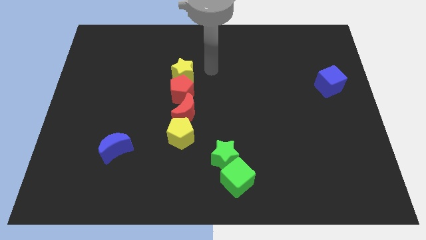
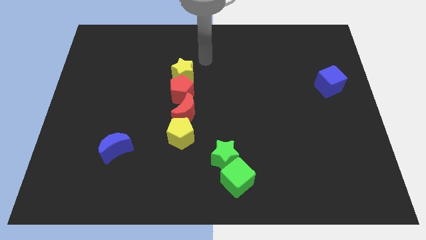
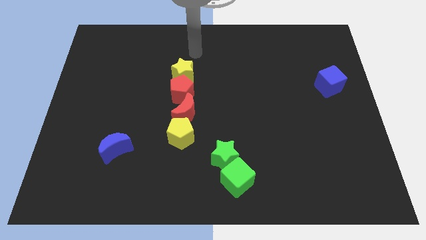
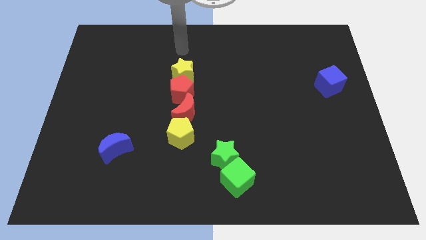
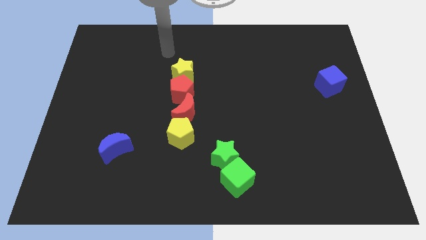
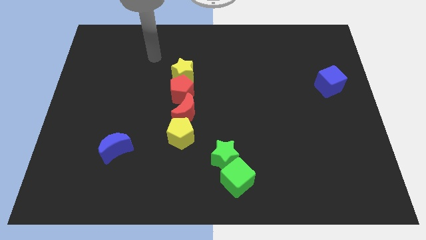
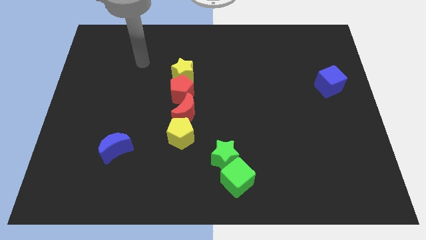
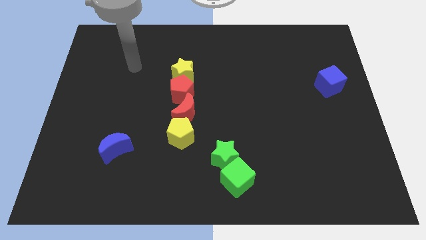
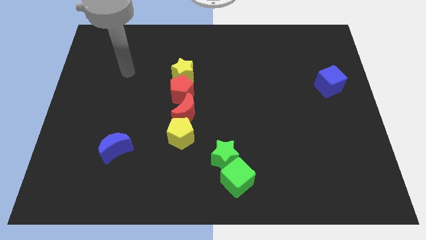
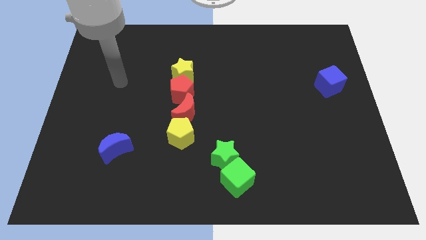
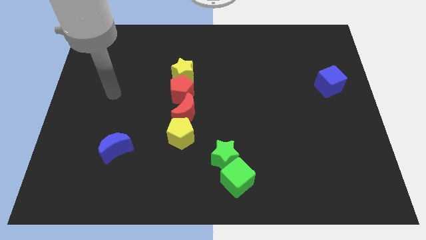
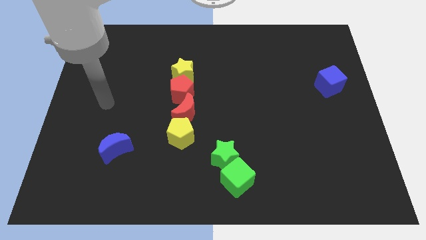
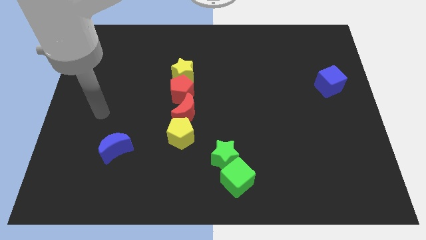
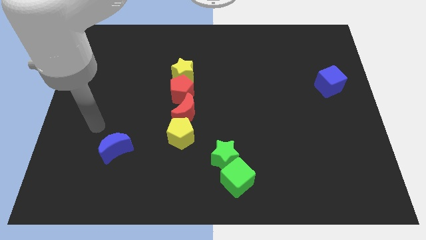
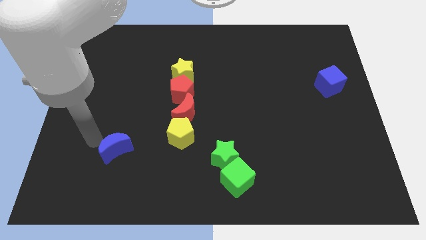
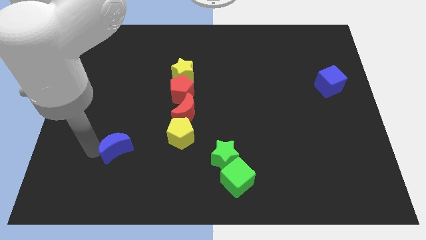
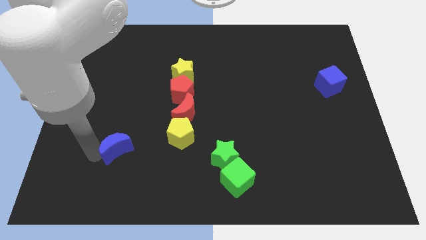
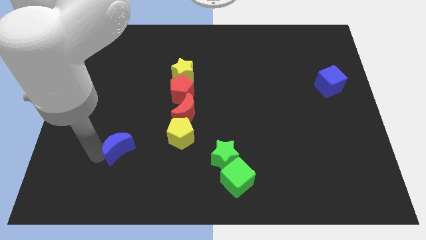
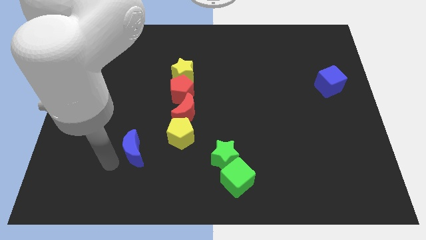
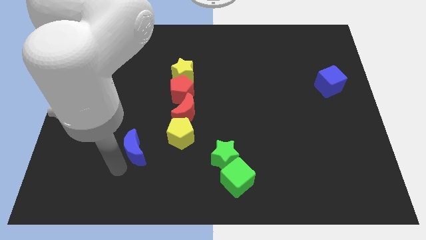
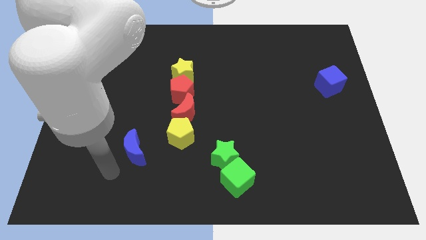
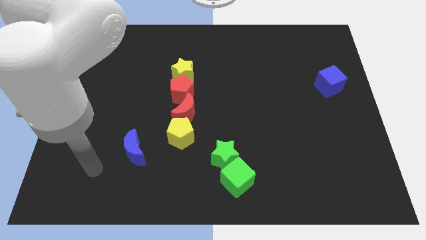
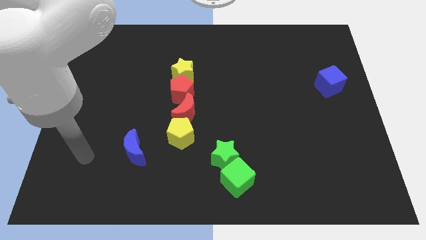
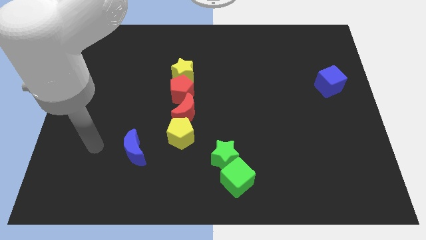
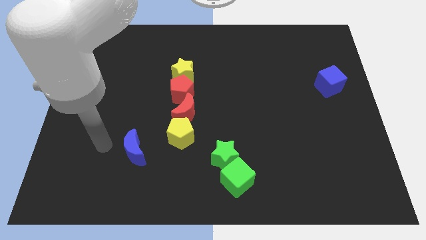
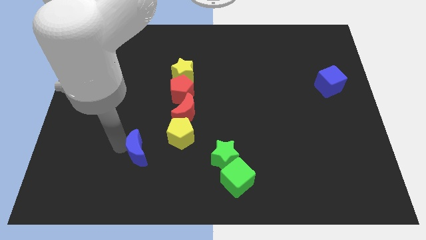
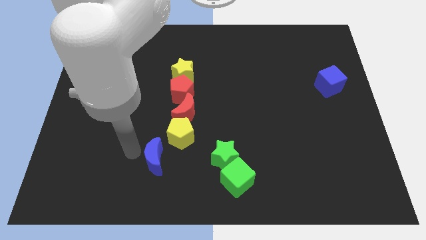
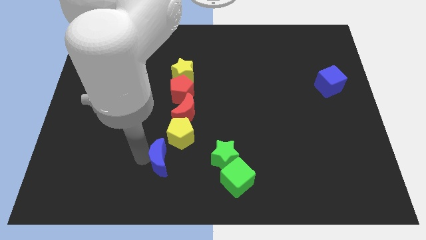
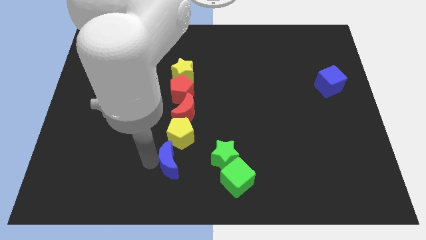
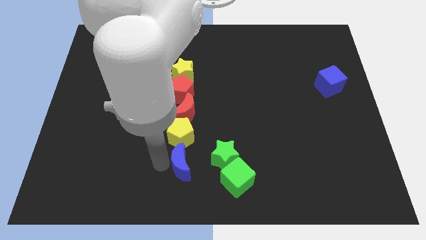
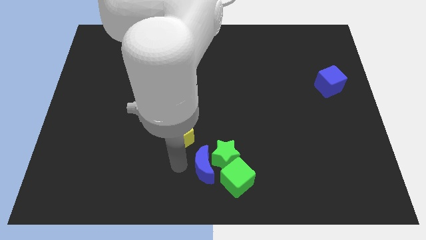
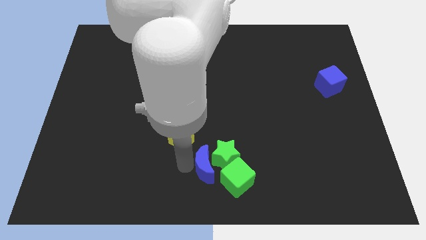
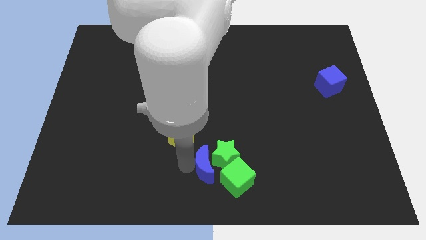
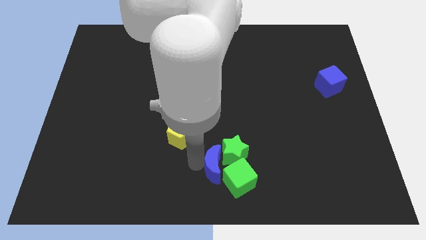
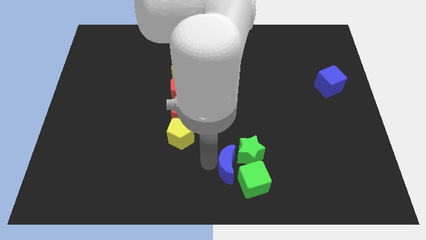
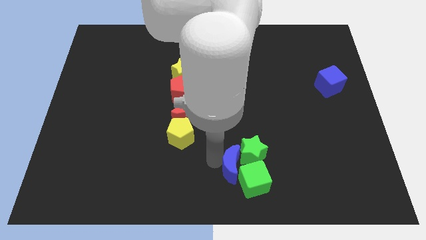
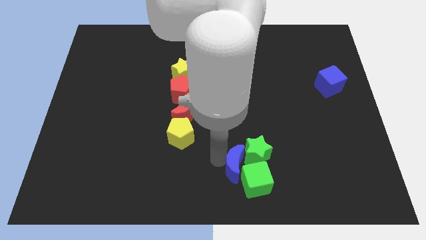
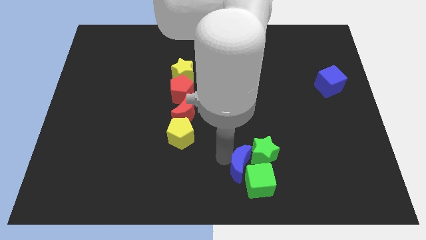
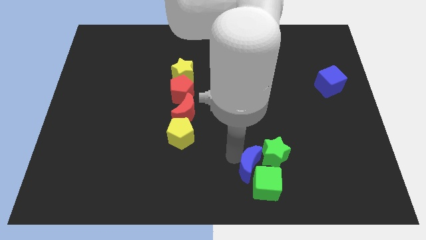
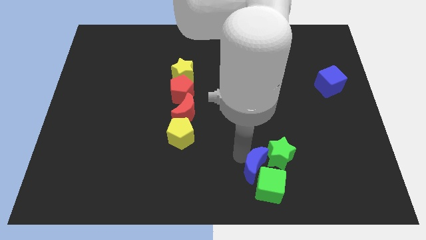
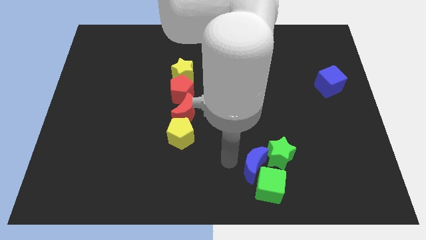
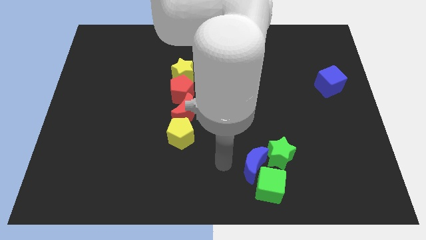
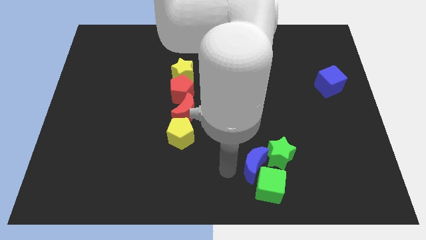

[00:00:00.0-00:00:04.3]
push the blue crescent into the green star and green cube

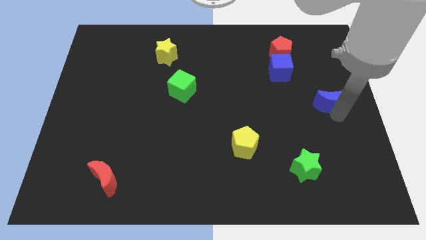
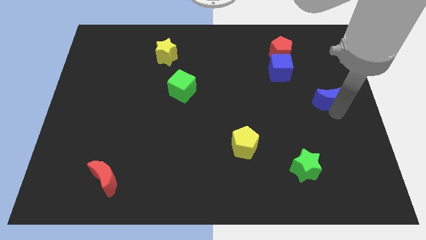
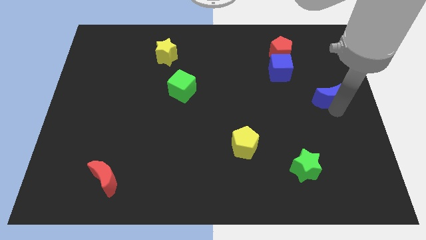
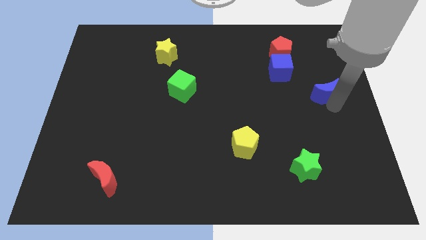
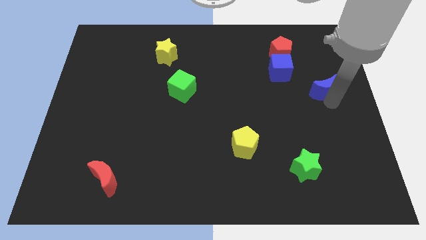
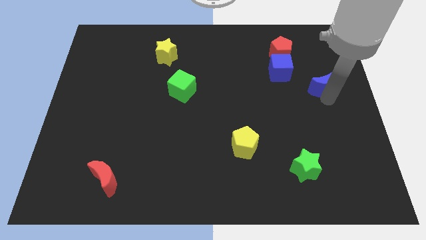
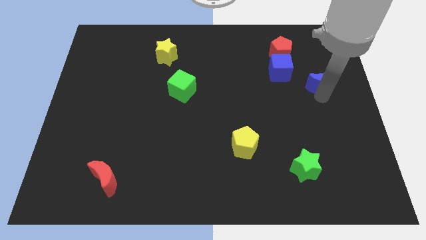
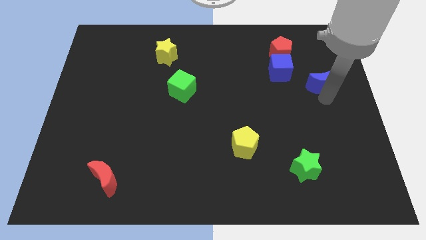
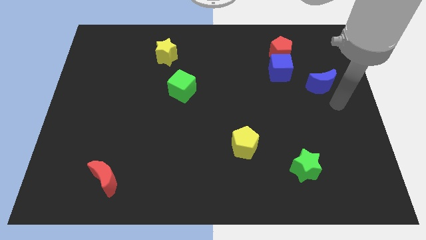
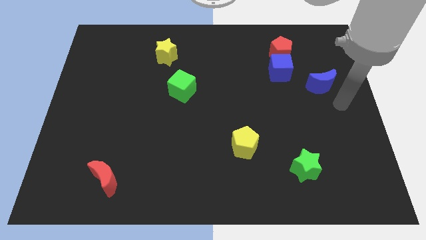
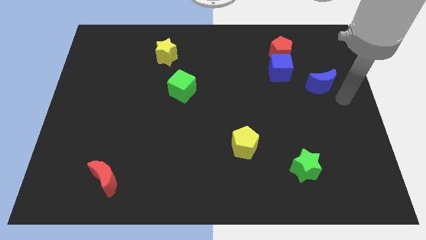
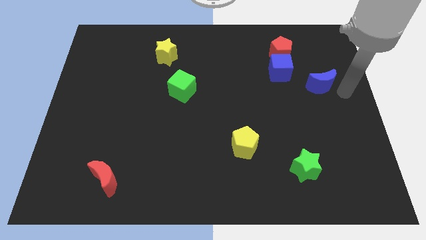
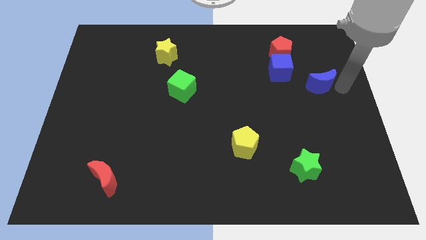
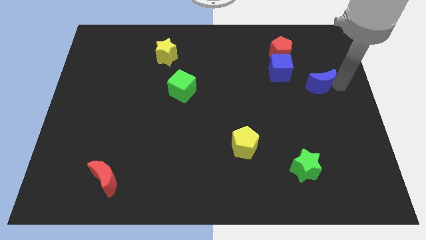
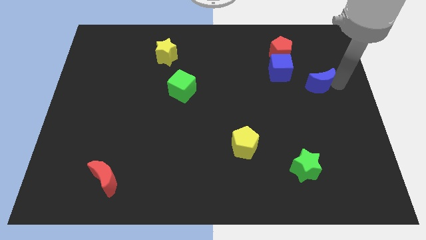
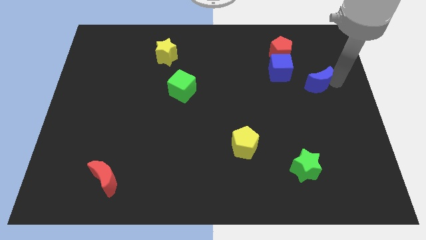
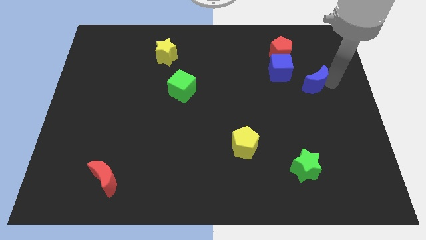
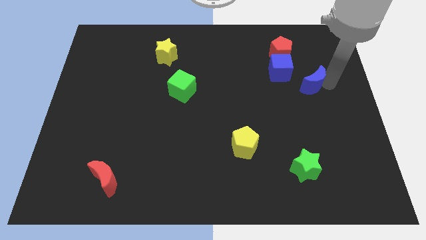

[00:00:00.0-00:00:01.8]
push the blue crescent to the right of the blue cube

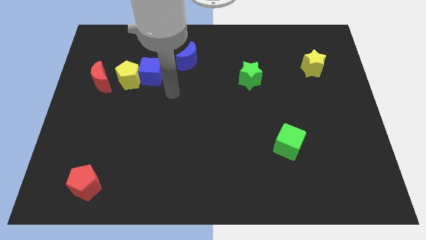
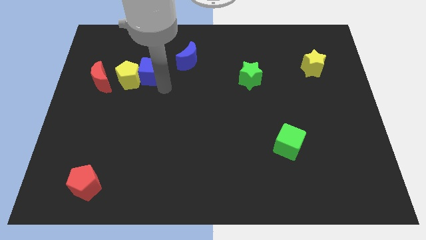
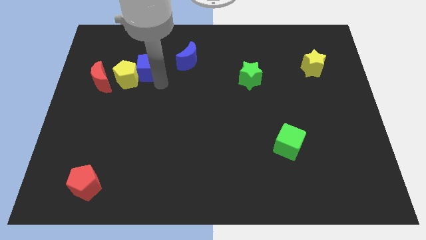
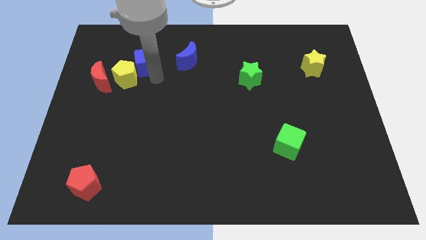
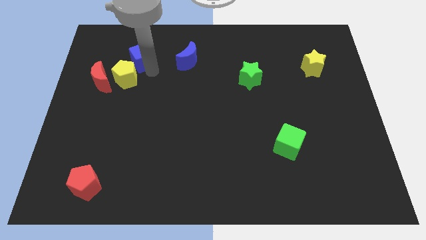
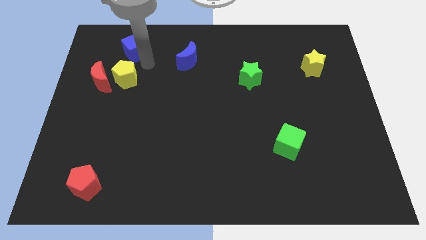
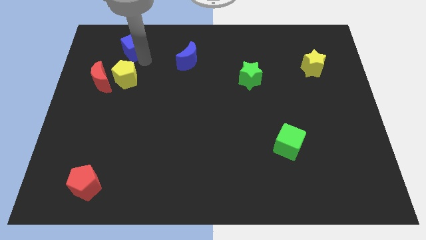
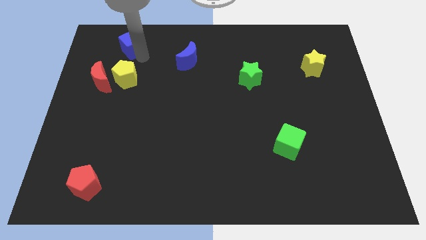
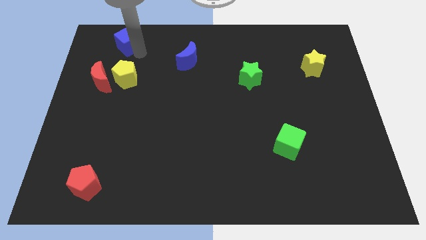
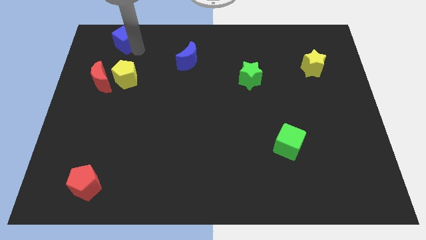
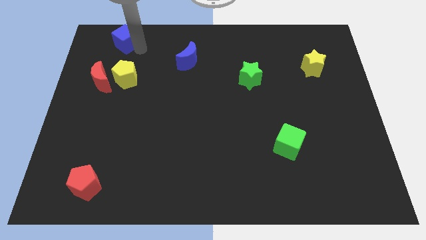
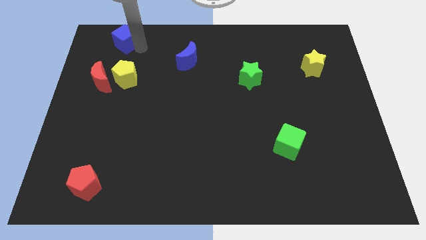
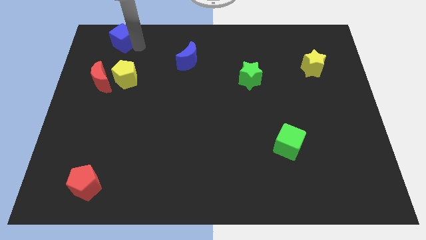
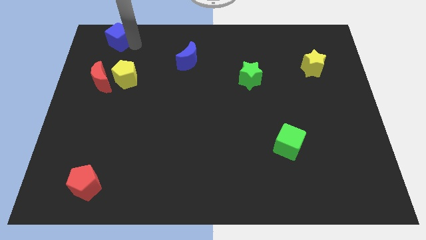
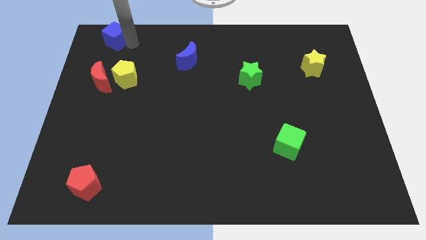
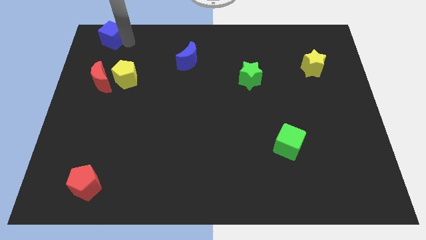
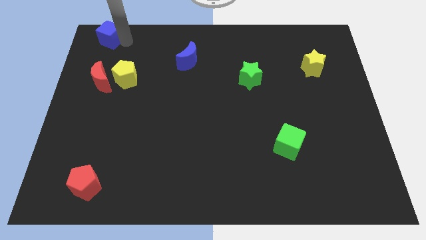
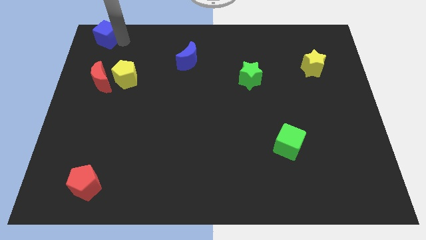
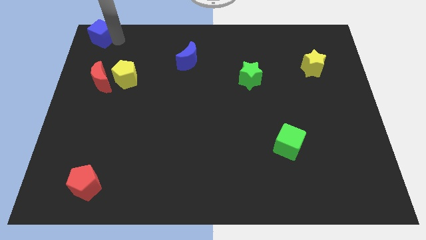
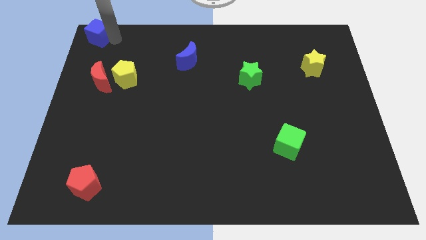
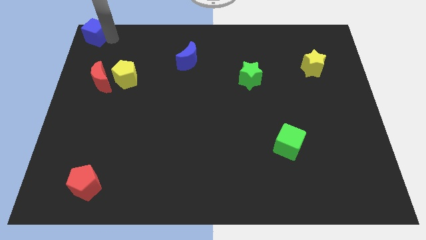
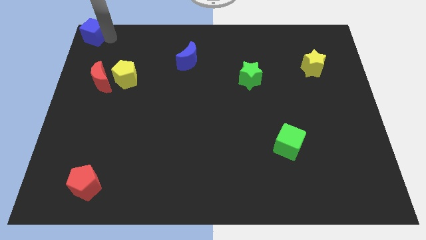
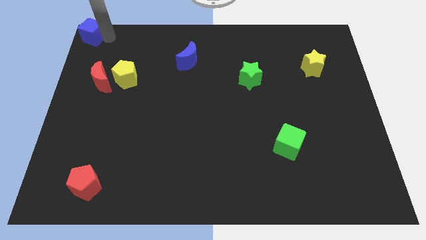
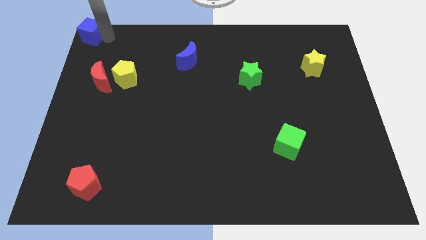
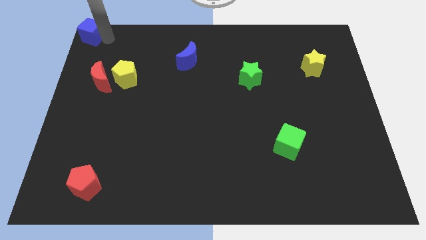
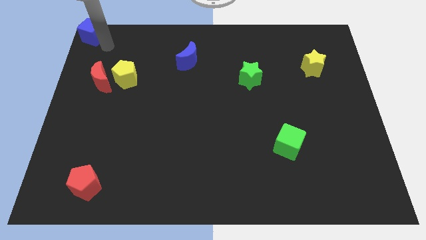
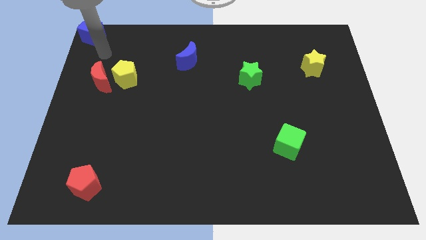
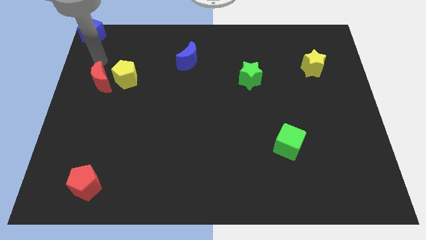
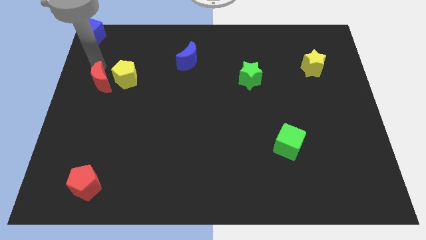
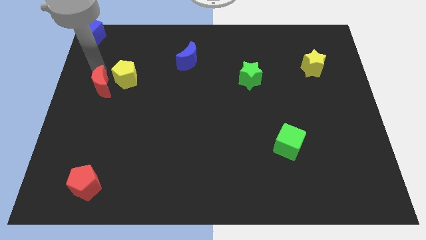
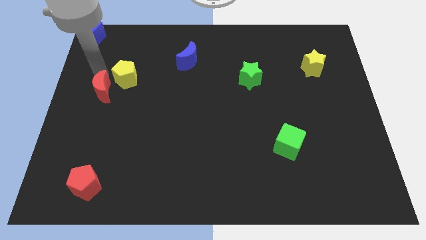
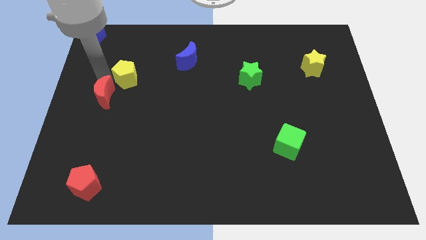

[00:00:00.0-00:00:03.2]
place the blue cube at the top left corner of the board
